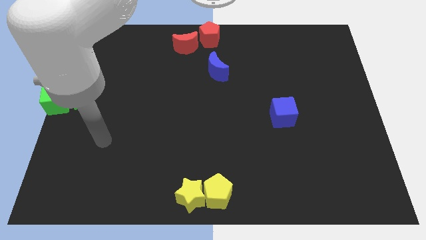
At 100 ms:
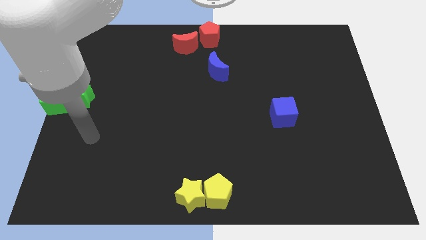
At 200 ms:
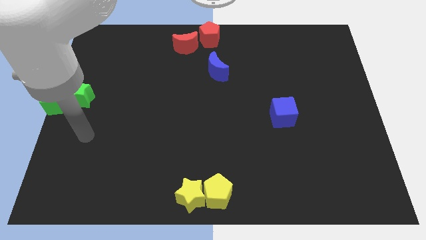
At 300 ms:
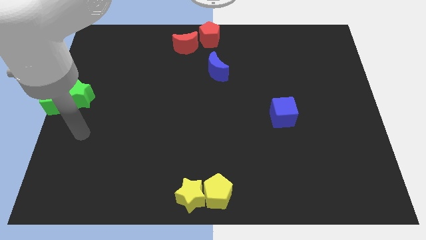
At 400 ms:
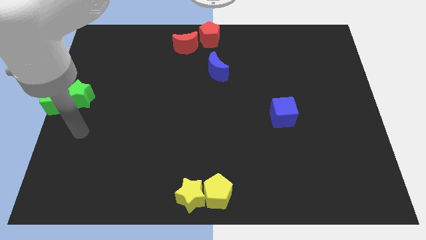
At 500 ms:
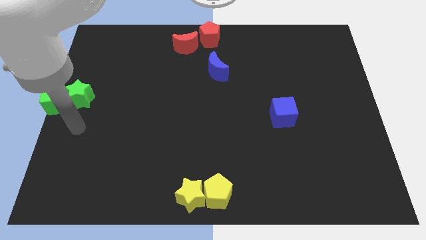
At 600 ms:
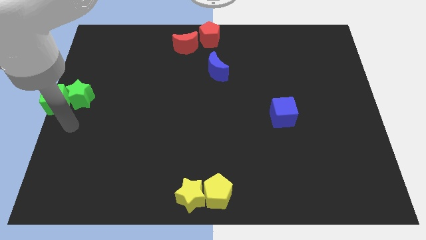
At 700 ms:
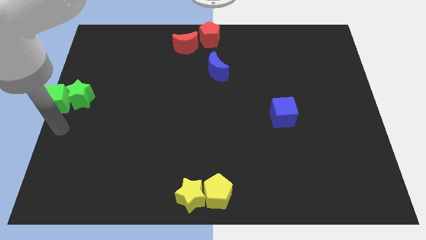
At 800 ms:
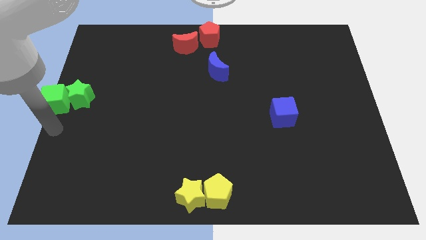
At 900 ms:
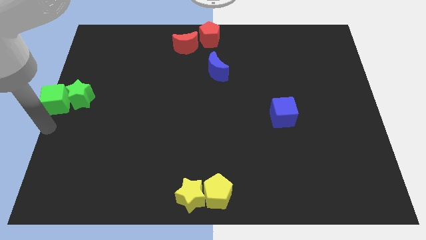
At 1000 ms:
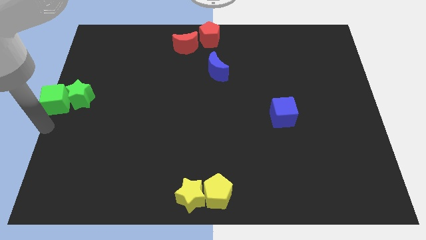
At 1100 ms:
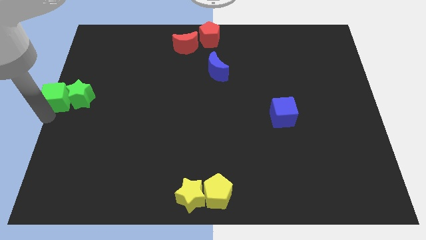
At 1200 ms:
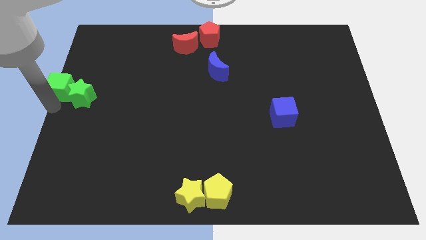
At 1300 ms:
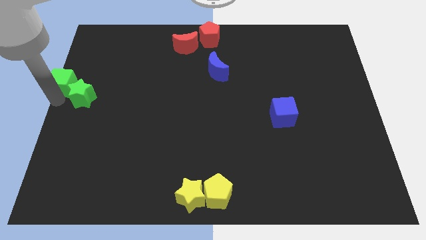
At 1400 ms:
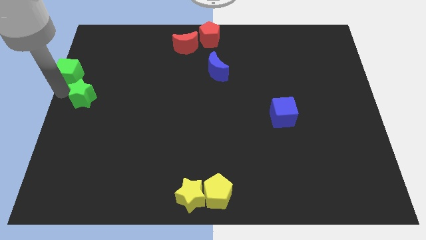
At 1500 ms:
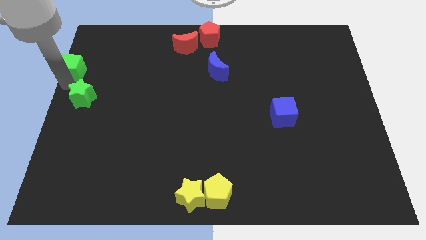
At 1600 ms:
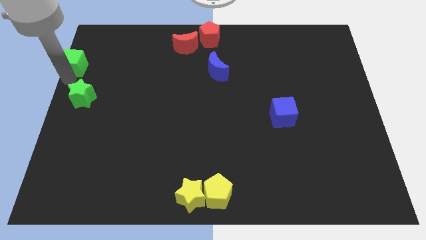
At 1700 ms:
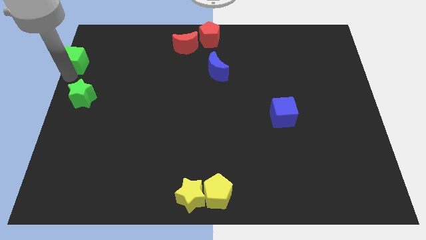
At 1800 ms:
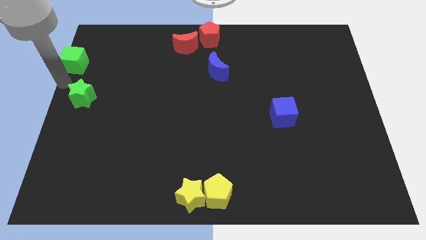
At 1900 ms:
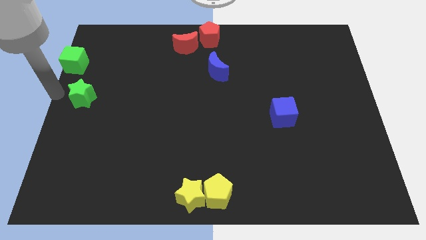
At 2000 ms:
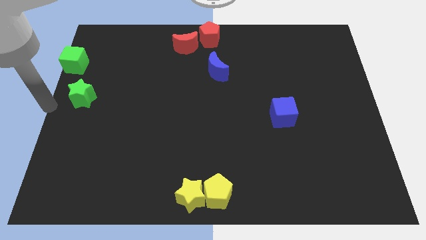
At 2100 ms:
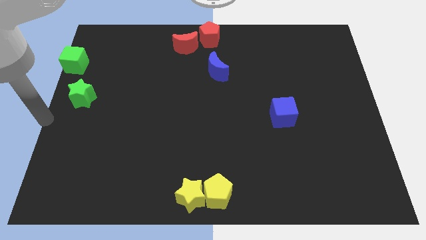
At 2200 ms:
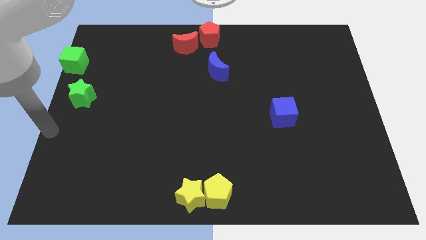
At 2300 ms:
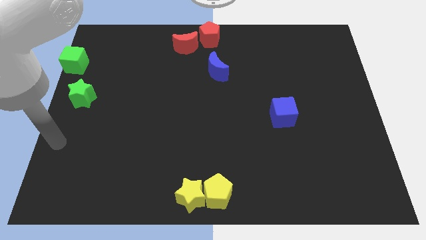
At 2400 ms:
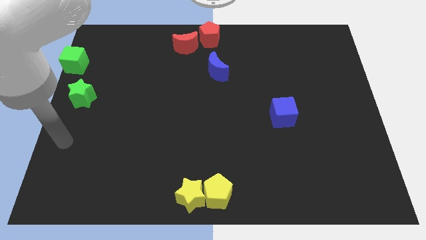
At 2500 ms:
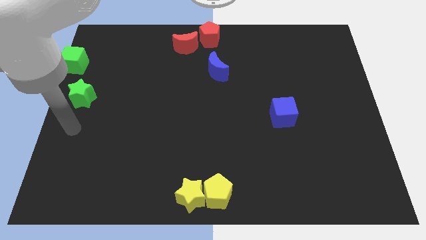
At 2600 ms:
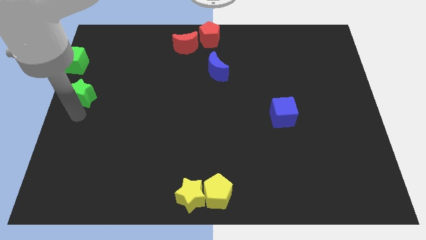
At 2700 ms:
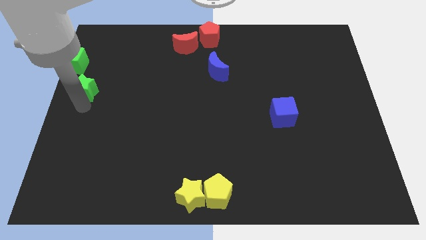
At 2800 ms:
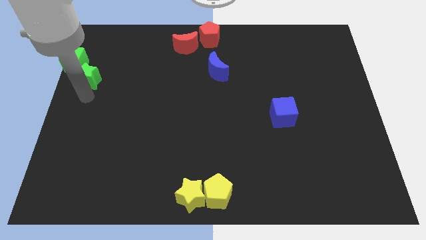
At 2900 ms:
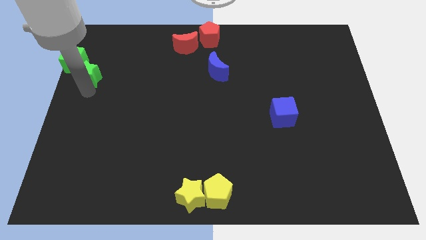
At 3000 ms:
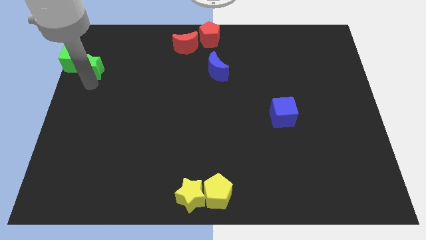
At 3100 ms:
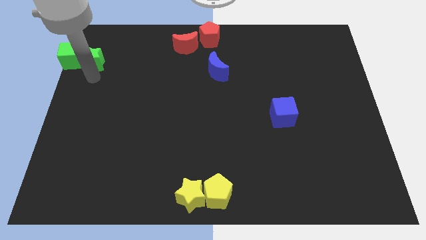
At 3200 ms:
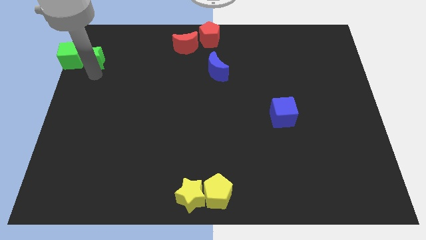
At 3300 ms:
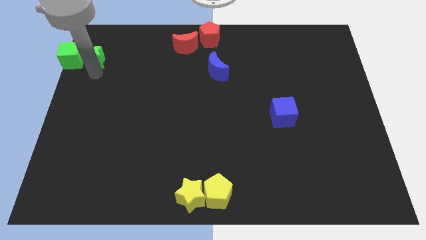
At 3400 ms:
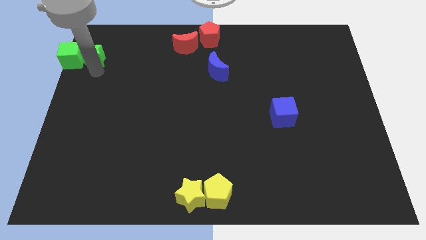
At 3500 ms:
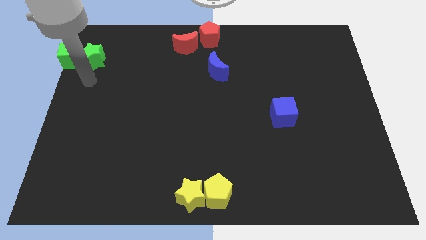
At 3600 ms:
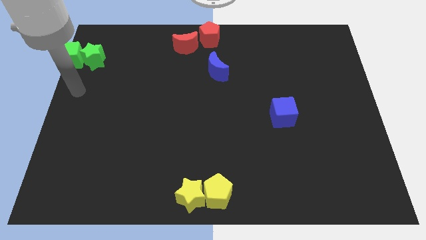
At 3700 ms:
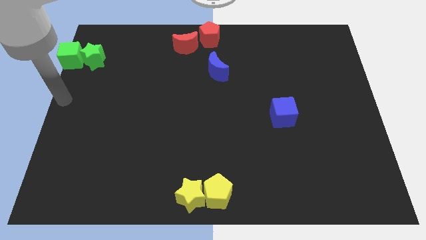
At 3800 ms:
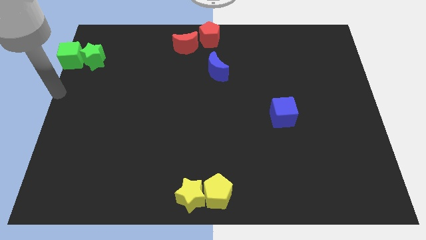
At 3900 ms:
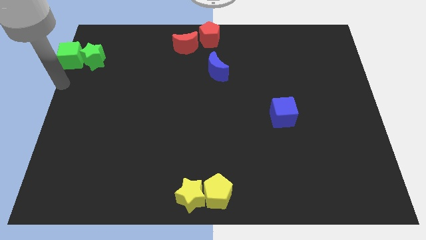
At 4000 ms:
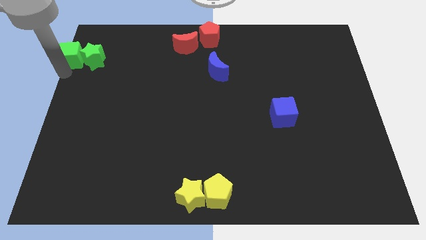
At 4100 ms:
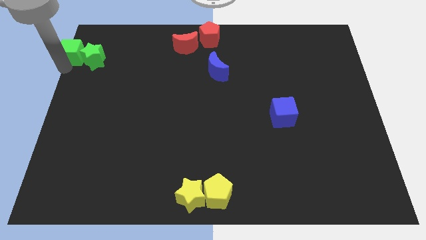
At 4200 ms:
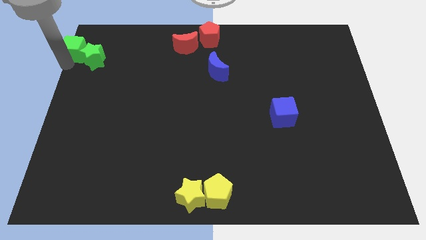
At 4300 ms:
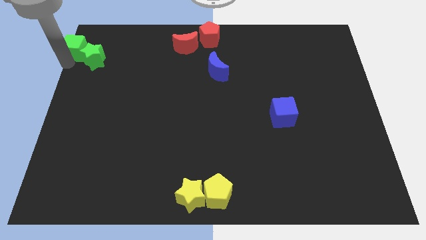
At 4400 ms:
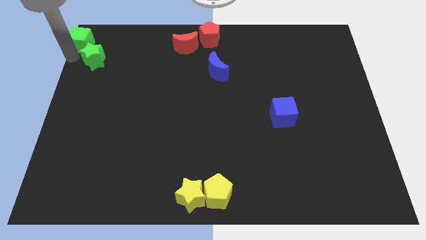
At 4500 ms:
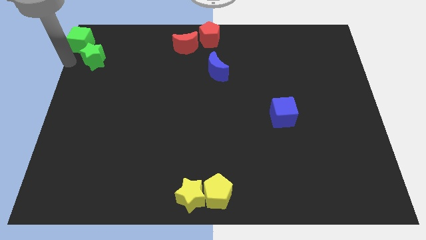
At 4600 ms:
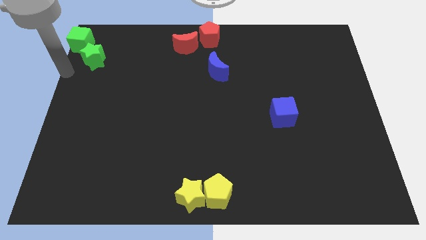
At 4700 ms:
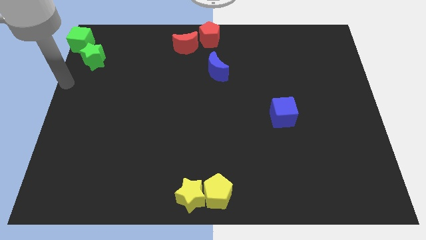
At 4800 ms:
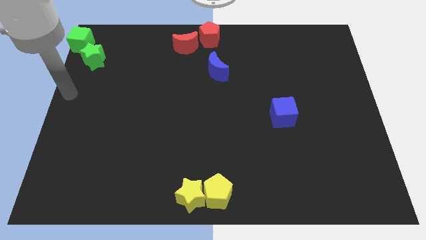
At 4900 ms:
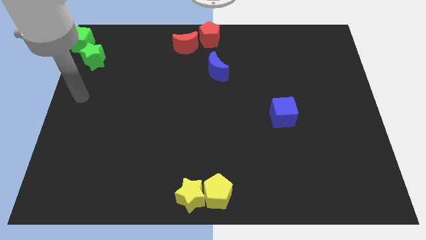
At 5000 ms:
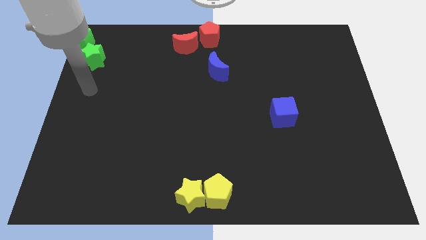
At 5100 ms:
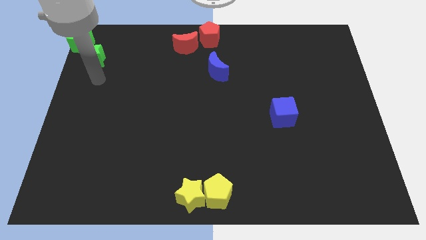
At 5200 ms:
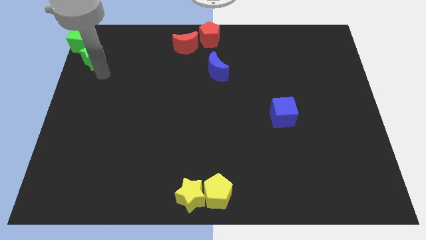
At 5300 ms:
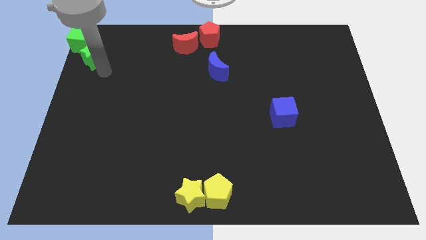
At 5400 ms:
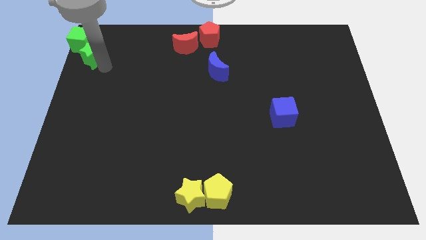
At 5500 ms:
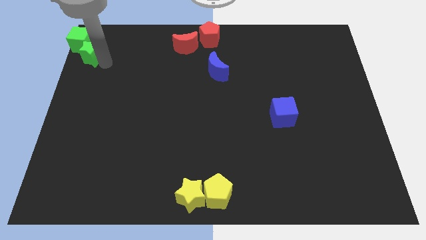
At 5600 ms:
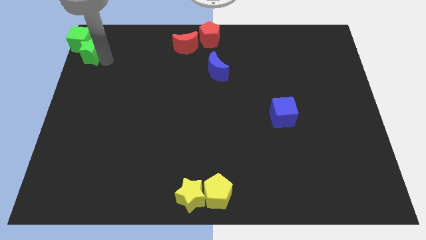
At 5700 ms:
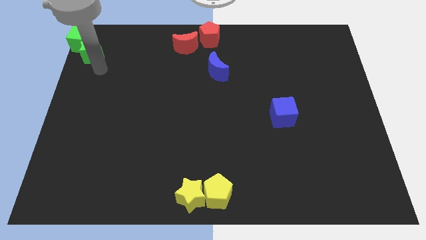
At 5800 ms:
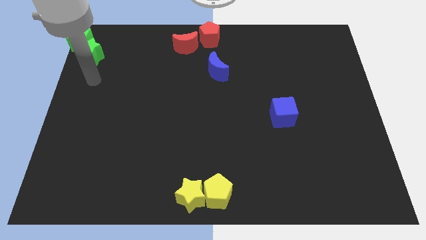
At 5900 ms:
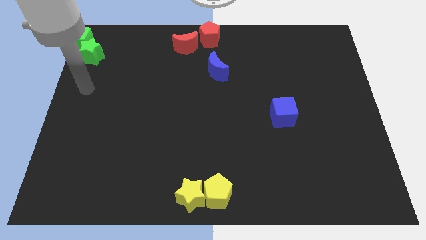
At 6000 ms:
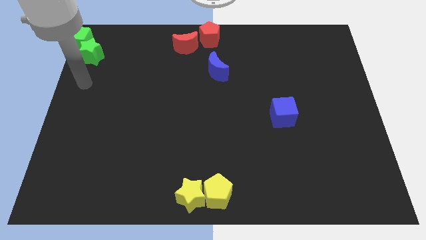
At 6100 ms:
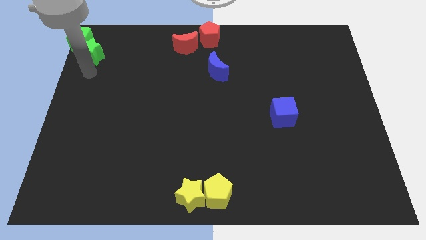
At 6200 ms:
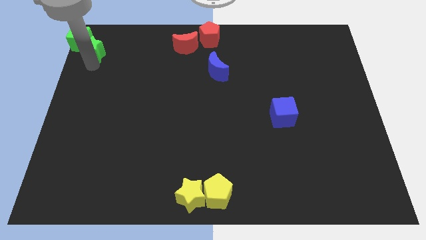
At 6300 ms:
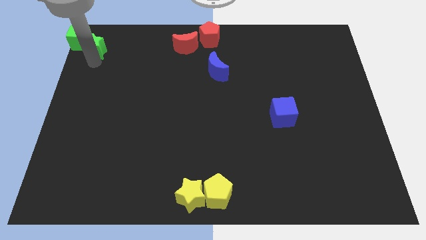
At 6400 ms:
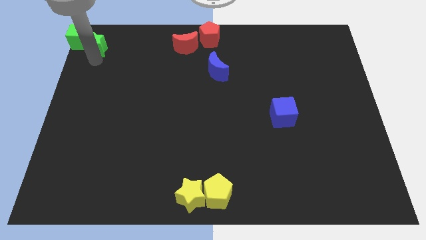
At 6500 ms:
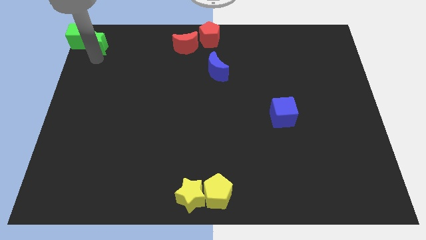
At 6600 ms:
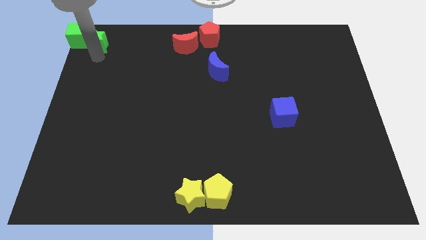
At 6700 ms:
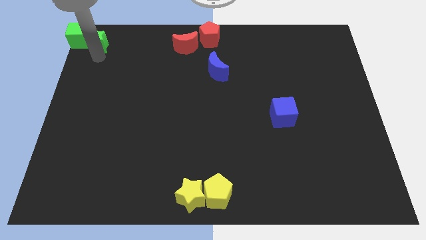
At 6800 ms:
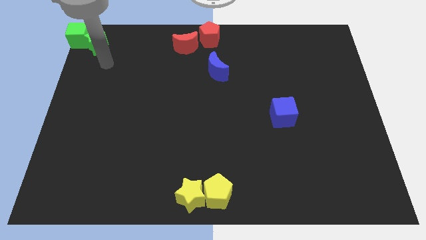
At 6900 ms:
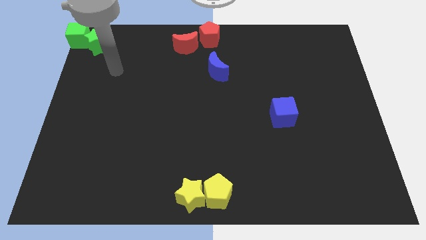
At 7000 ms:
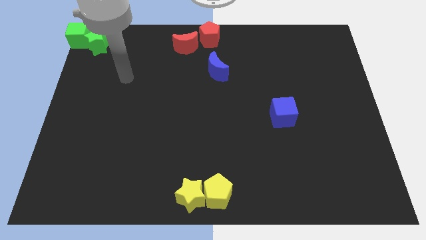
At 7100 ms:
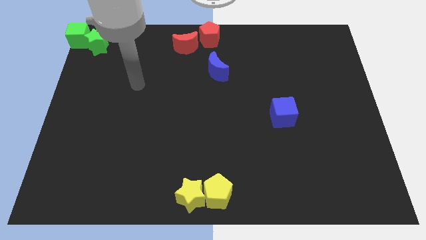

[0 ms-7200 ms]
push the green cube and green star towards the top left corner of the board

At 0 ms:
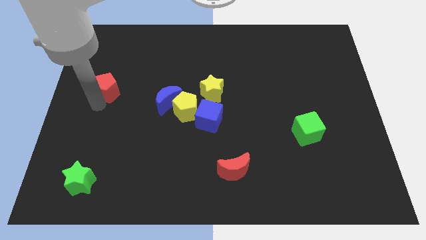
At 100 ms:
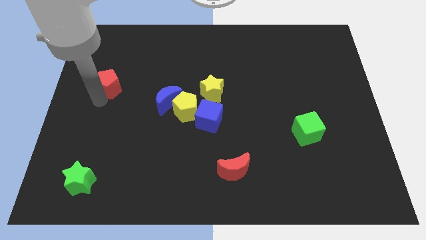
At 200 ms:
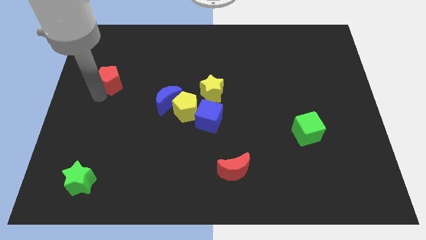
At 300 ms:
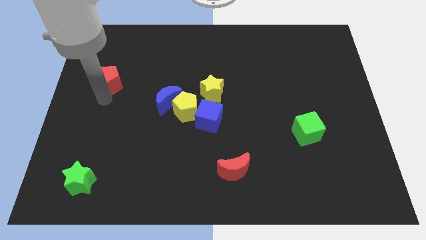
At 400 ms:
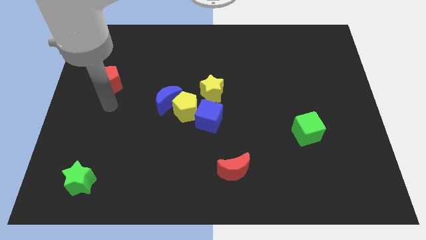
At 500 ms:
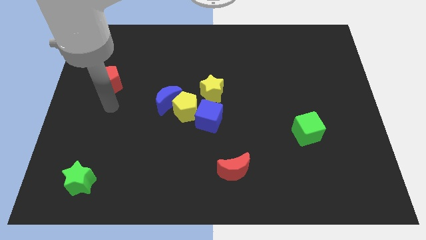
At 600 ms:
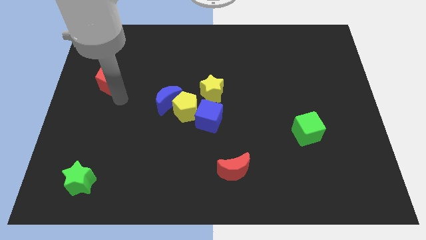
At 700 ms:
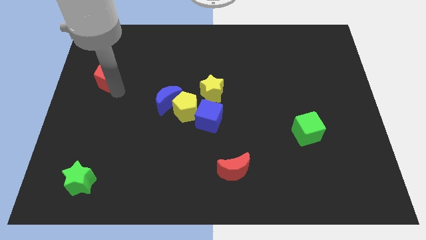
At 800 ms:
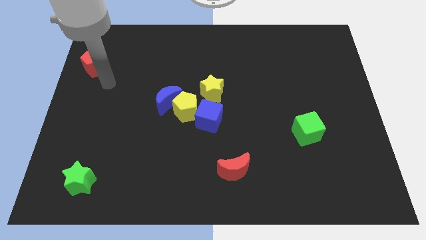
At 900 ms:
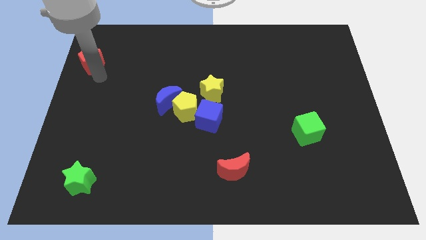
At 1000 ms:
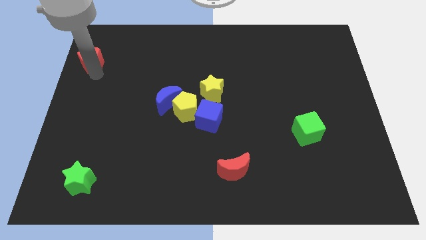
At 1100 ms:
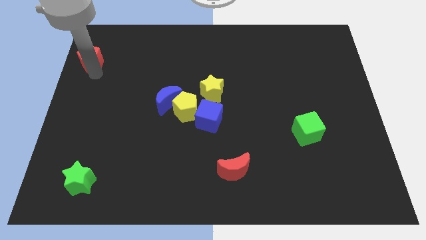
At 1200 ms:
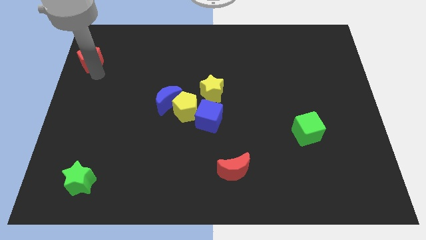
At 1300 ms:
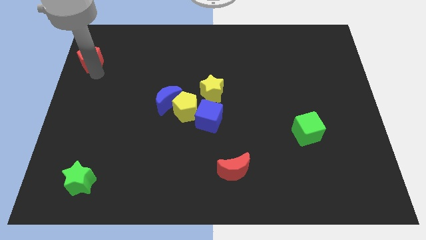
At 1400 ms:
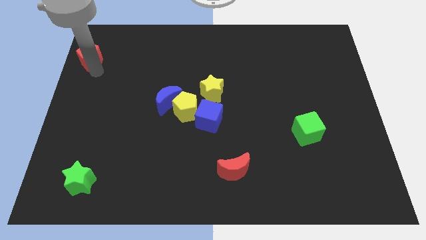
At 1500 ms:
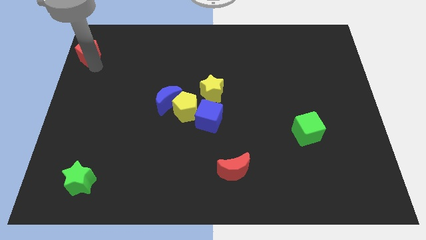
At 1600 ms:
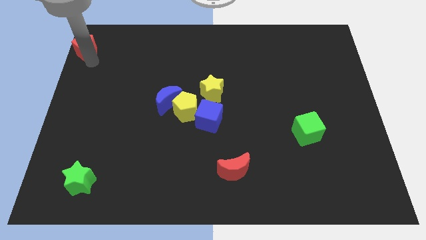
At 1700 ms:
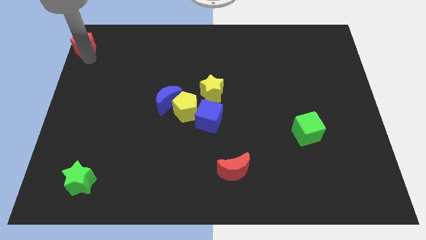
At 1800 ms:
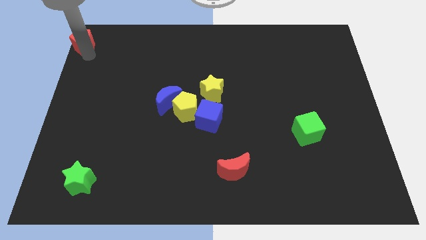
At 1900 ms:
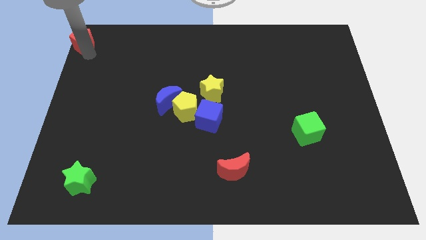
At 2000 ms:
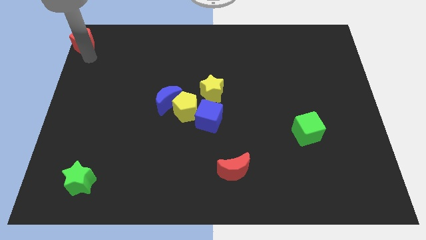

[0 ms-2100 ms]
slide red pentagon to the top left
